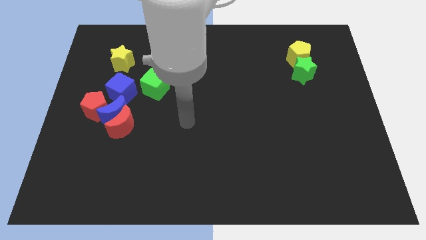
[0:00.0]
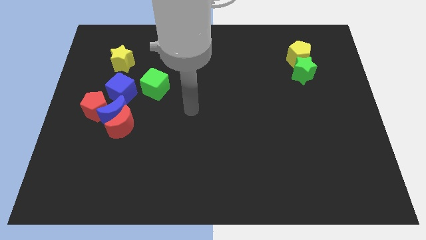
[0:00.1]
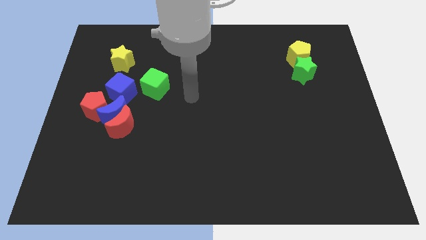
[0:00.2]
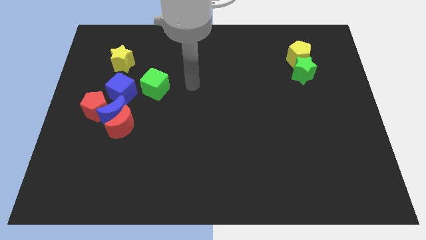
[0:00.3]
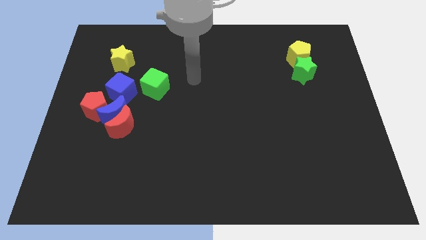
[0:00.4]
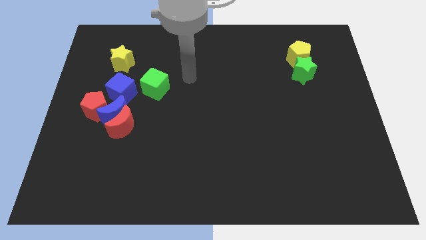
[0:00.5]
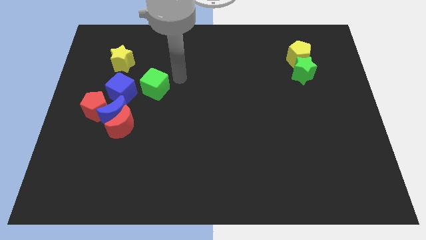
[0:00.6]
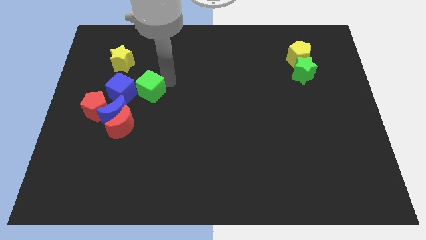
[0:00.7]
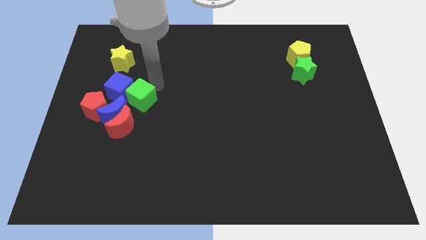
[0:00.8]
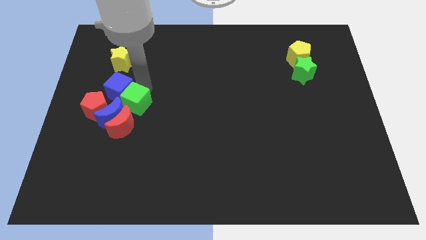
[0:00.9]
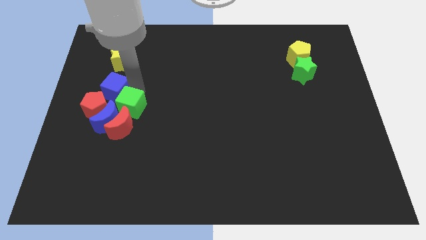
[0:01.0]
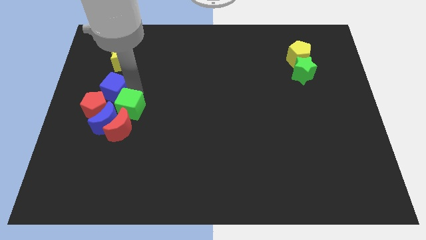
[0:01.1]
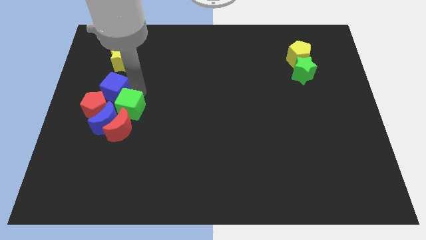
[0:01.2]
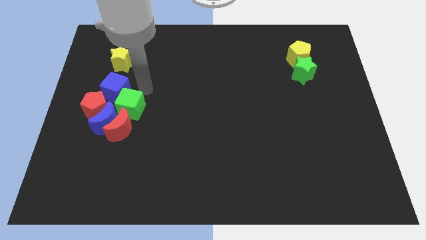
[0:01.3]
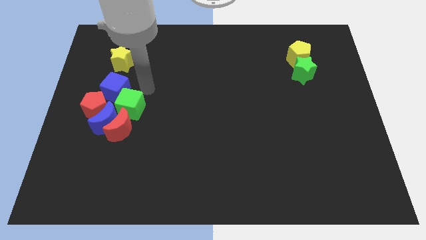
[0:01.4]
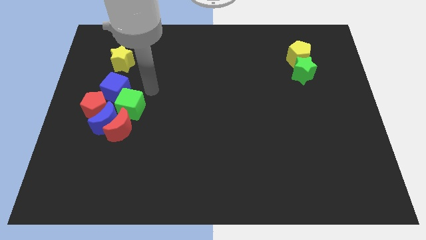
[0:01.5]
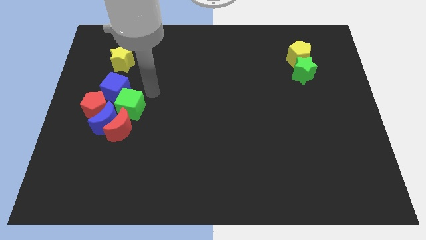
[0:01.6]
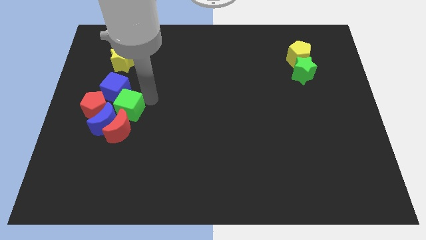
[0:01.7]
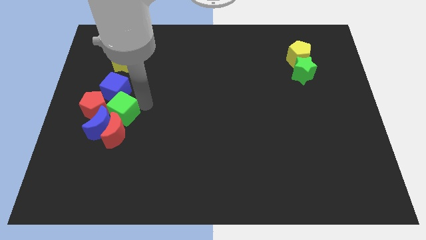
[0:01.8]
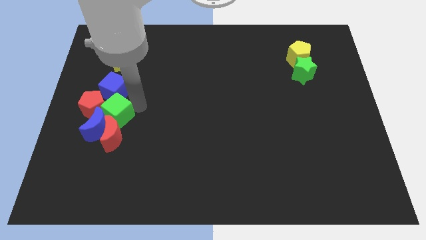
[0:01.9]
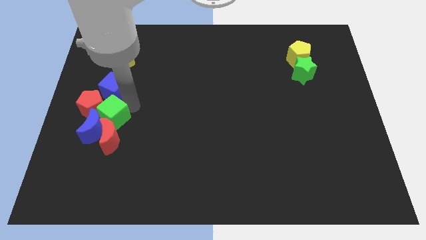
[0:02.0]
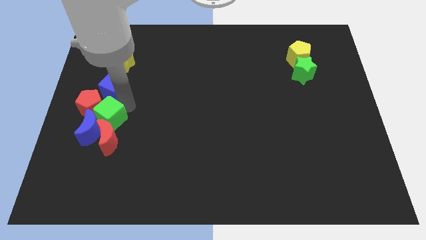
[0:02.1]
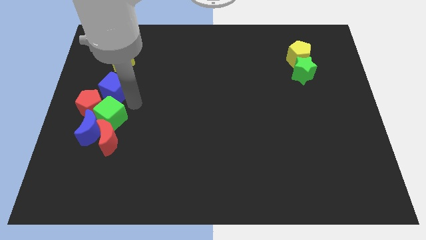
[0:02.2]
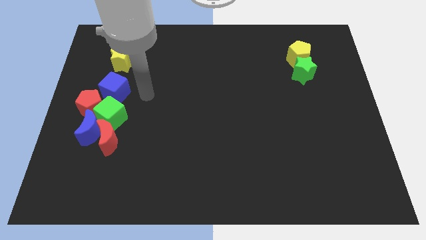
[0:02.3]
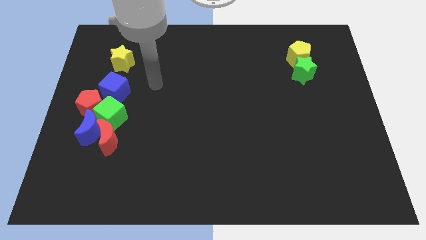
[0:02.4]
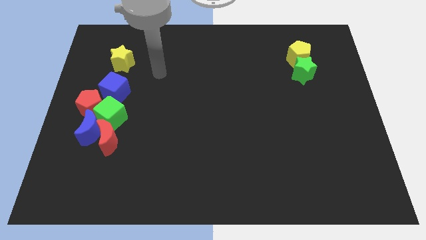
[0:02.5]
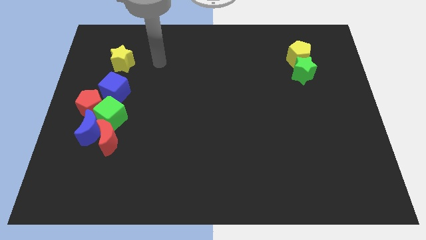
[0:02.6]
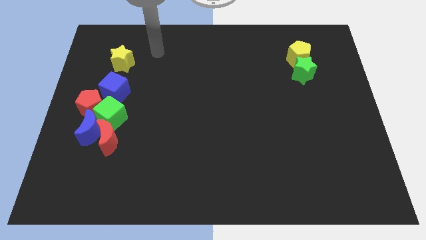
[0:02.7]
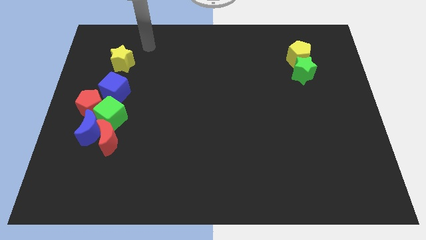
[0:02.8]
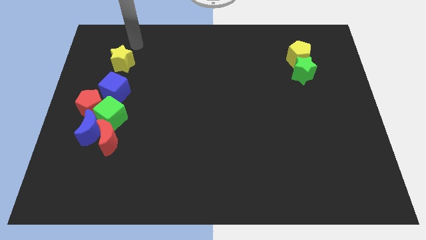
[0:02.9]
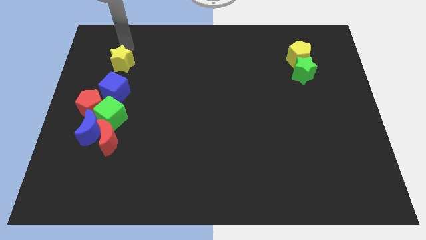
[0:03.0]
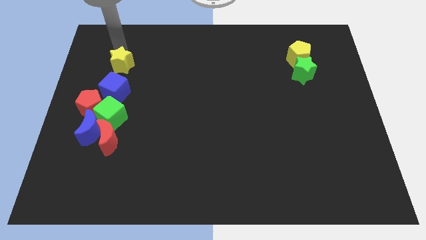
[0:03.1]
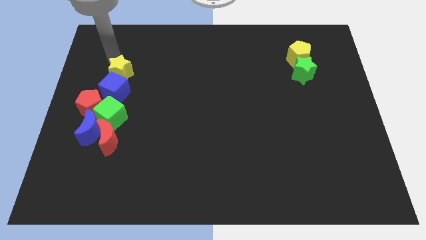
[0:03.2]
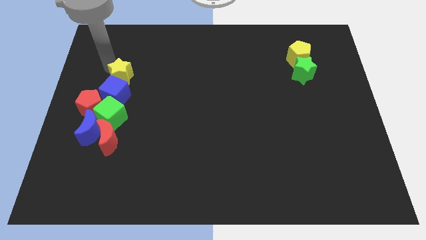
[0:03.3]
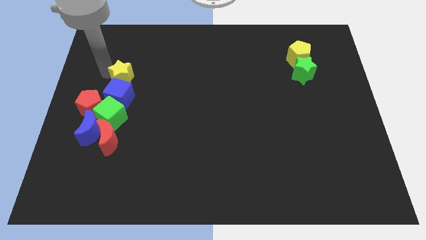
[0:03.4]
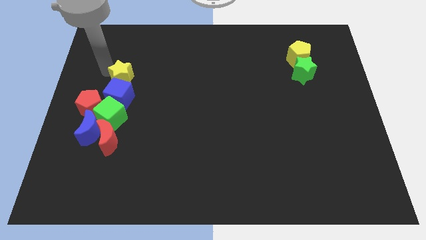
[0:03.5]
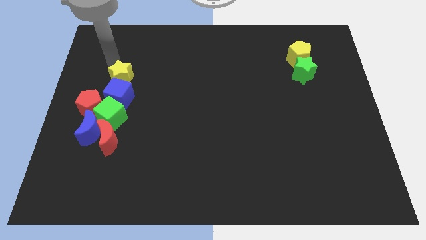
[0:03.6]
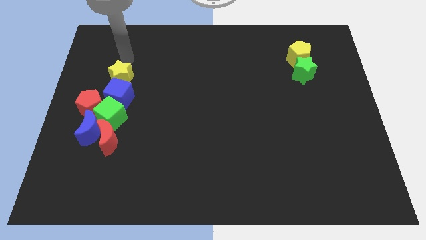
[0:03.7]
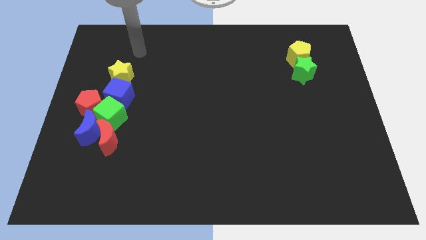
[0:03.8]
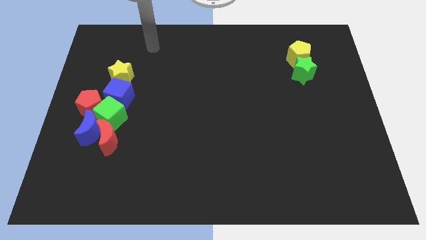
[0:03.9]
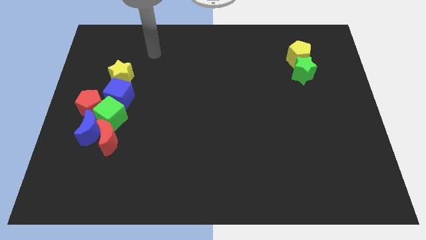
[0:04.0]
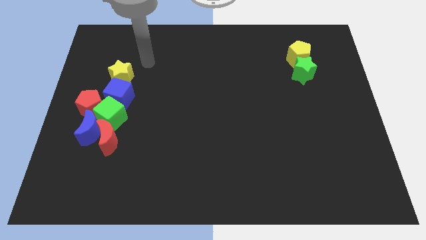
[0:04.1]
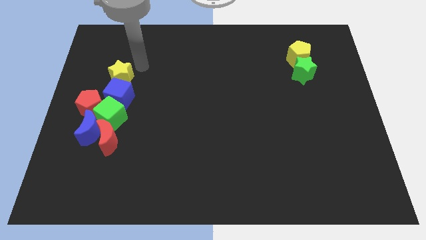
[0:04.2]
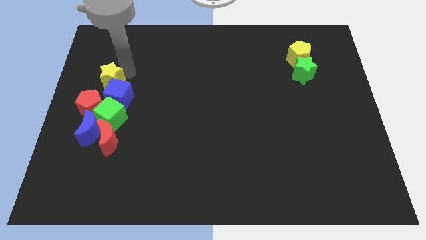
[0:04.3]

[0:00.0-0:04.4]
push the green cube into the blue crescent

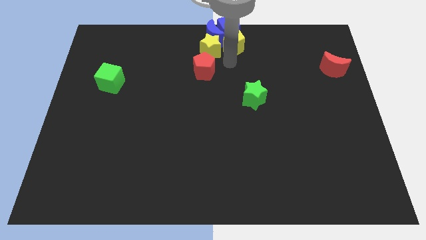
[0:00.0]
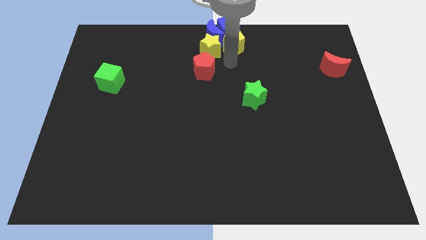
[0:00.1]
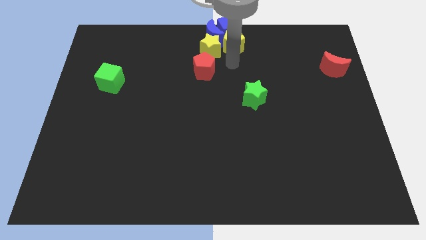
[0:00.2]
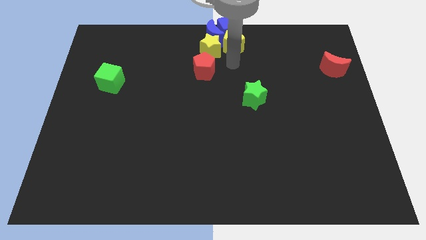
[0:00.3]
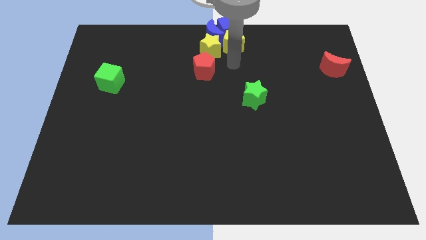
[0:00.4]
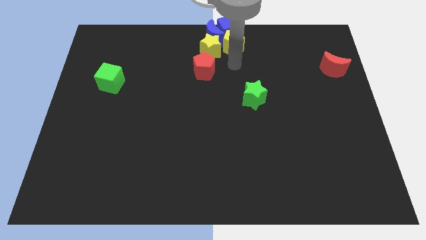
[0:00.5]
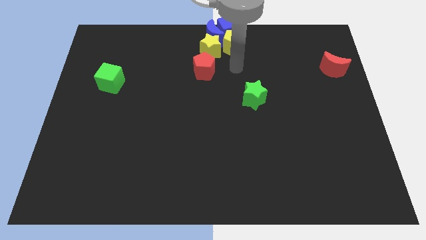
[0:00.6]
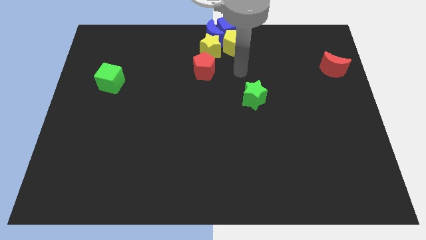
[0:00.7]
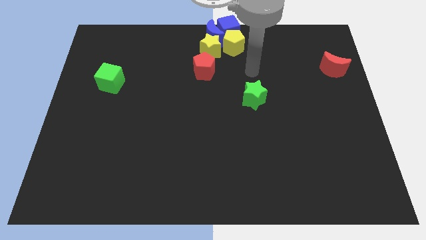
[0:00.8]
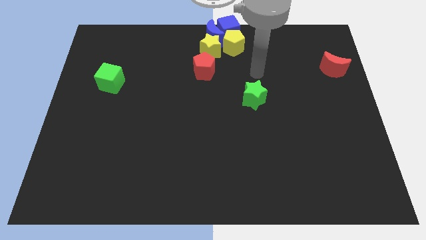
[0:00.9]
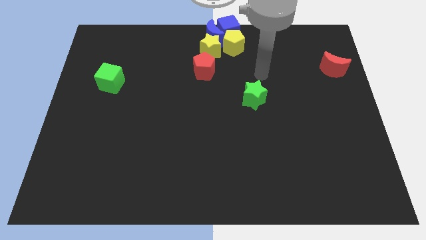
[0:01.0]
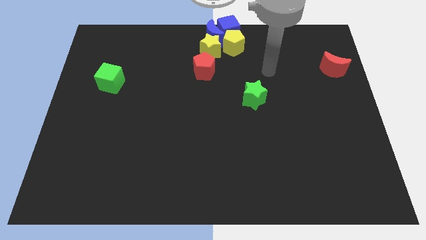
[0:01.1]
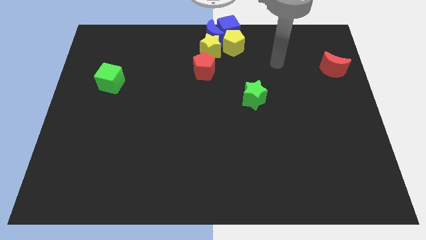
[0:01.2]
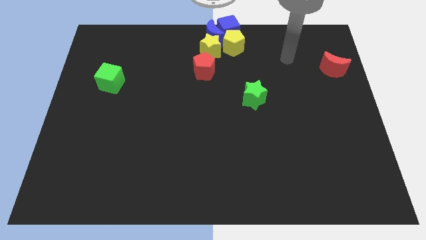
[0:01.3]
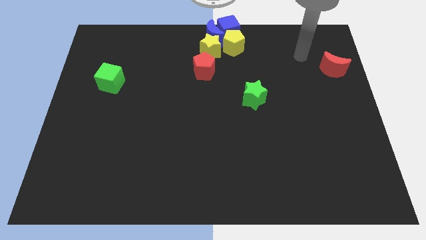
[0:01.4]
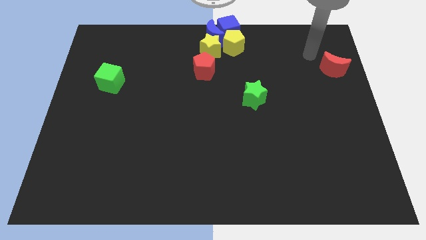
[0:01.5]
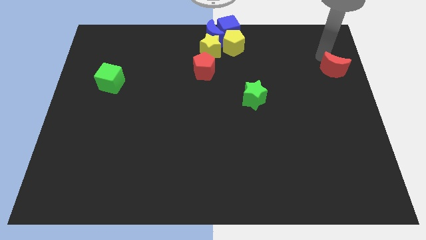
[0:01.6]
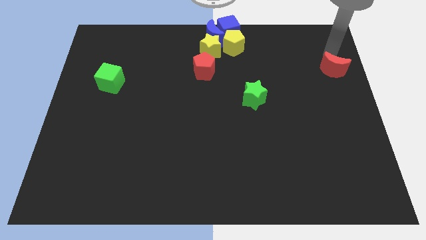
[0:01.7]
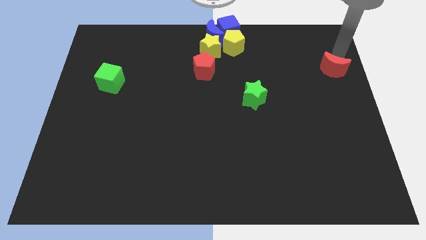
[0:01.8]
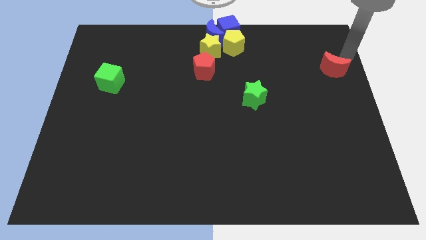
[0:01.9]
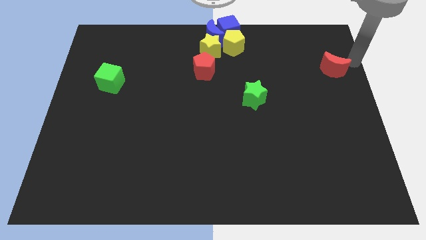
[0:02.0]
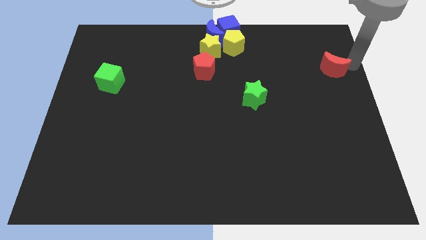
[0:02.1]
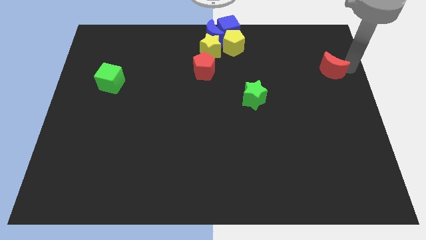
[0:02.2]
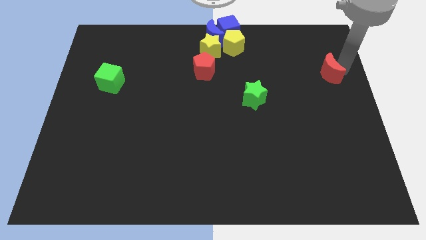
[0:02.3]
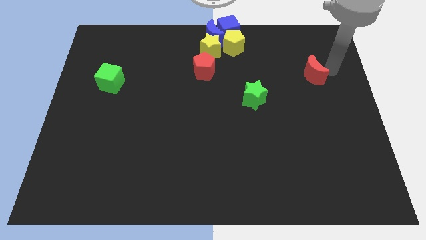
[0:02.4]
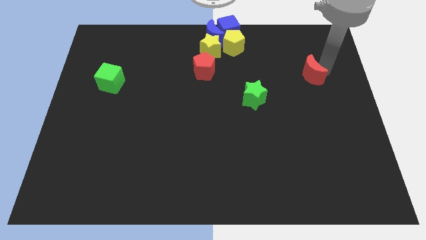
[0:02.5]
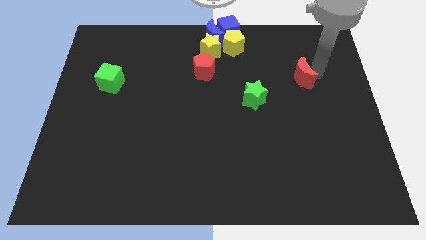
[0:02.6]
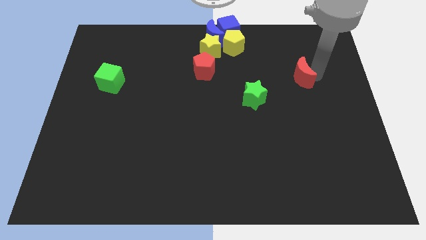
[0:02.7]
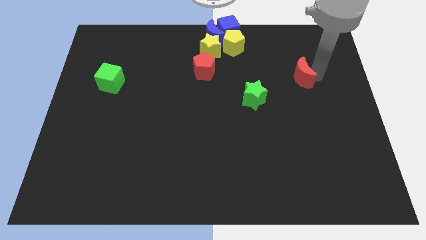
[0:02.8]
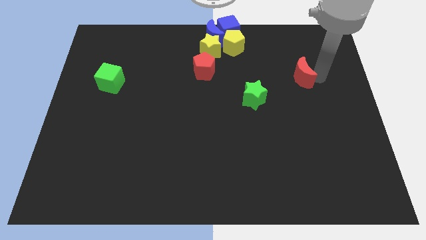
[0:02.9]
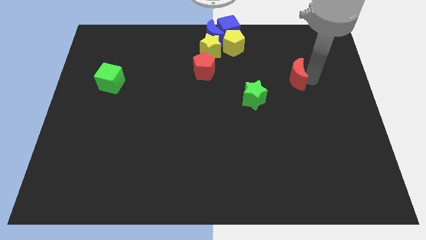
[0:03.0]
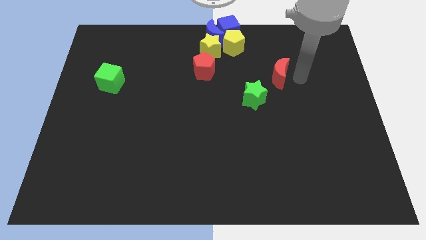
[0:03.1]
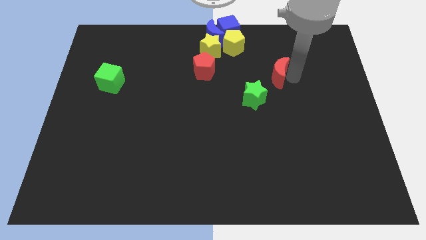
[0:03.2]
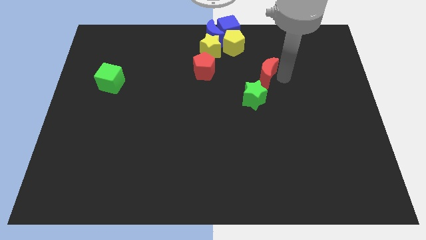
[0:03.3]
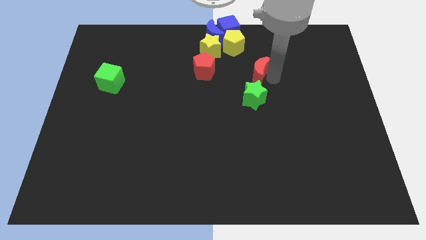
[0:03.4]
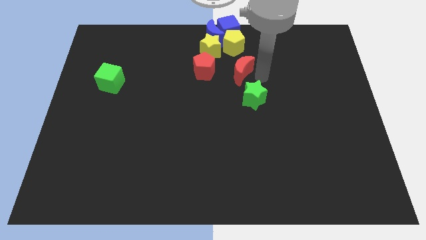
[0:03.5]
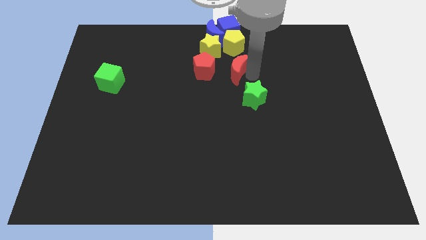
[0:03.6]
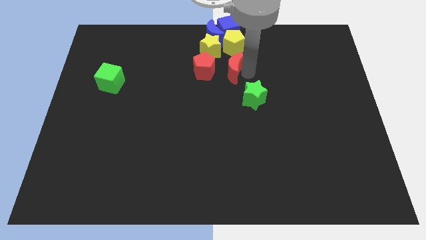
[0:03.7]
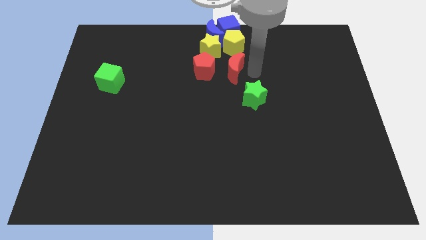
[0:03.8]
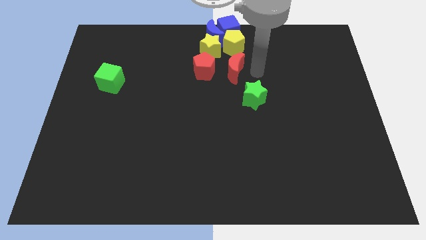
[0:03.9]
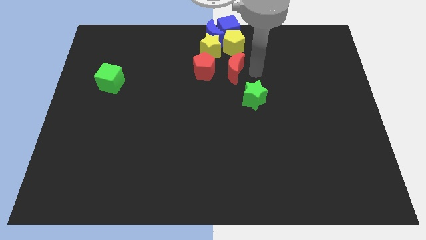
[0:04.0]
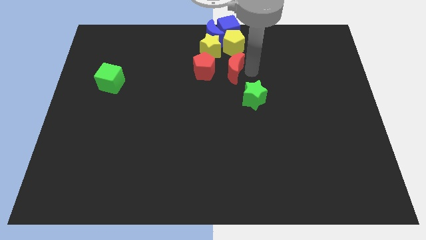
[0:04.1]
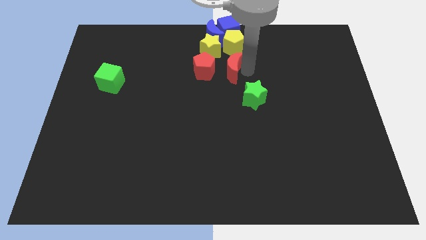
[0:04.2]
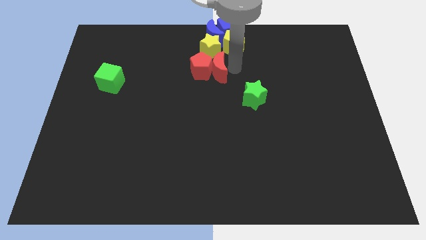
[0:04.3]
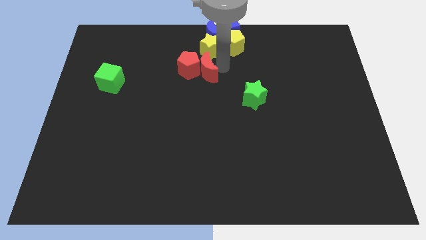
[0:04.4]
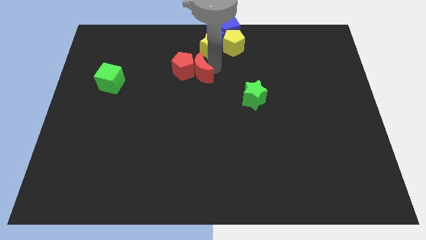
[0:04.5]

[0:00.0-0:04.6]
drag the red crescent into the right side of the red pentagon

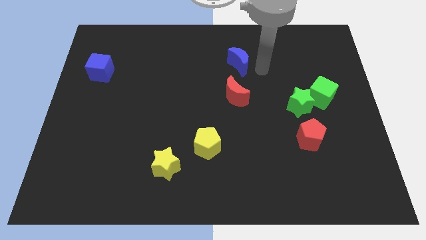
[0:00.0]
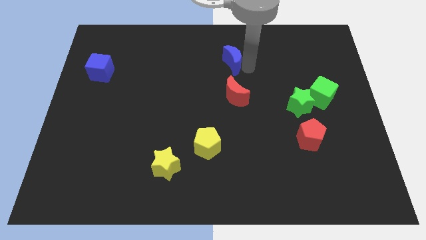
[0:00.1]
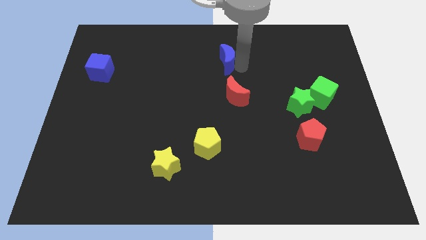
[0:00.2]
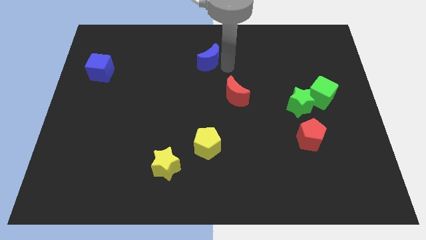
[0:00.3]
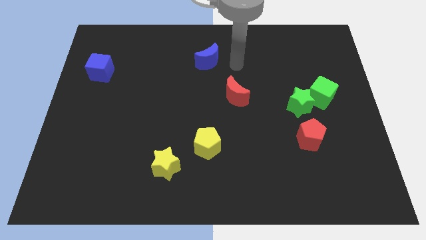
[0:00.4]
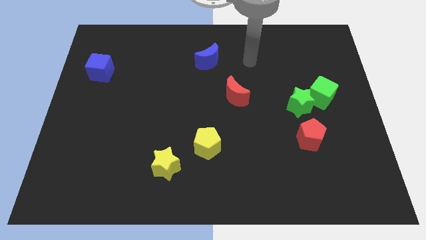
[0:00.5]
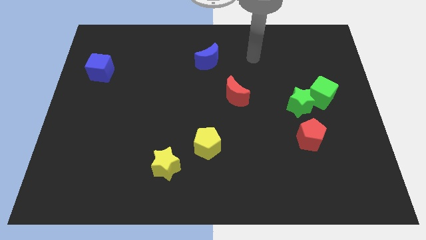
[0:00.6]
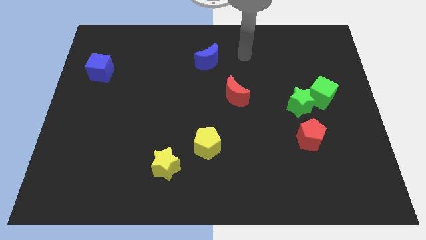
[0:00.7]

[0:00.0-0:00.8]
push the blue moon towards the blue cube
